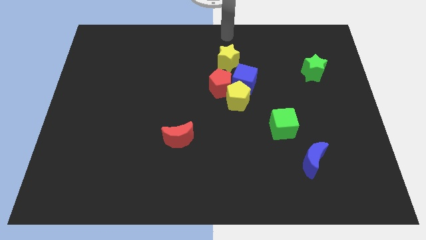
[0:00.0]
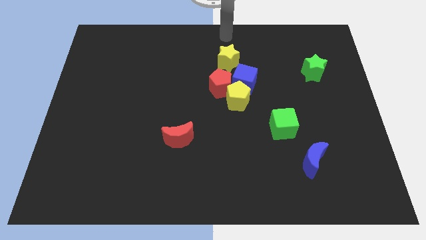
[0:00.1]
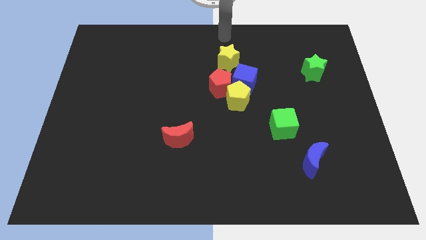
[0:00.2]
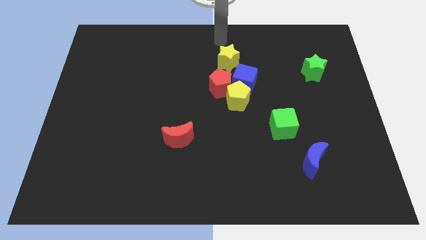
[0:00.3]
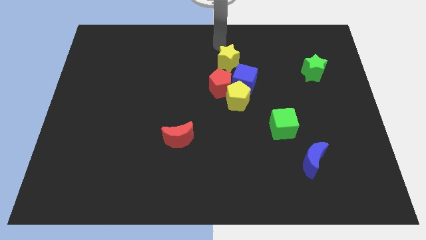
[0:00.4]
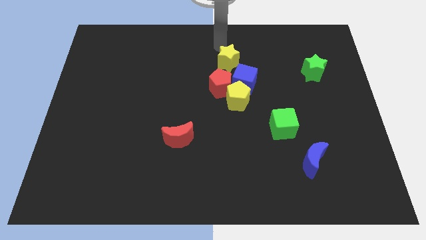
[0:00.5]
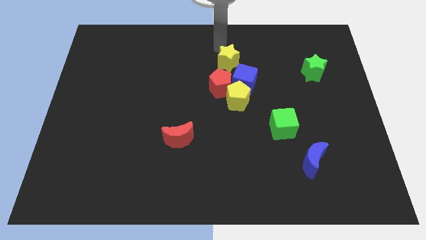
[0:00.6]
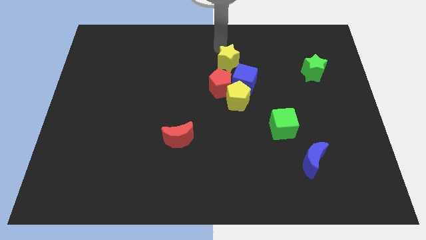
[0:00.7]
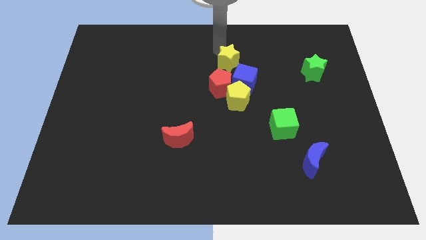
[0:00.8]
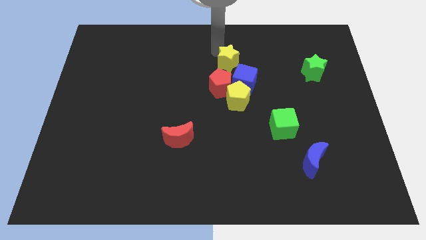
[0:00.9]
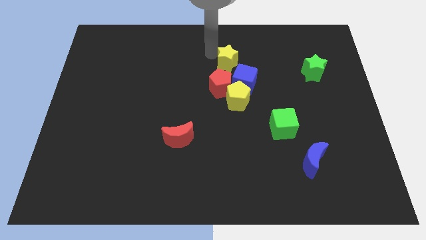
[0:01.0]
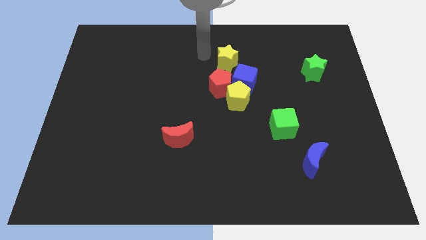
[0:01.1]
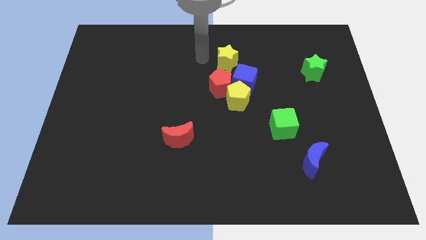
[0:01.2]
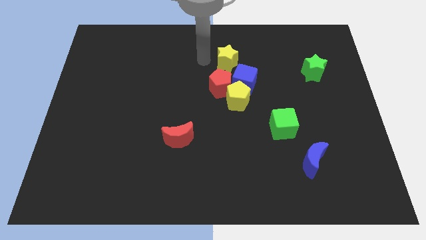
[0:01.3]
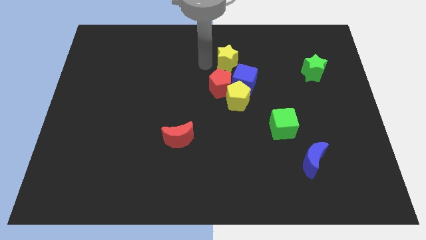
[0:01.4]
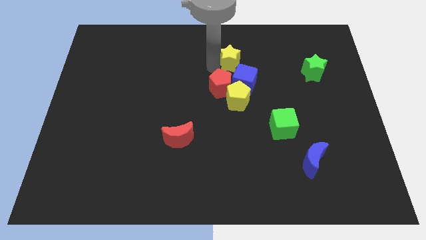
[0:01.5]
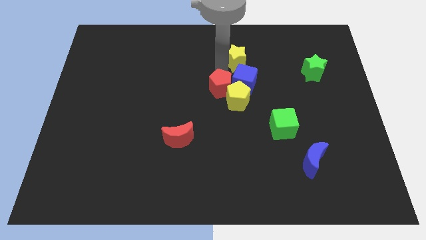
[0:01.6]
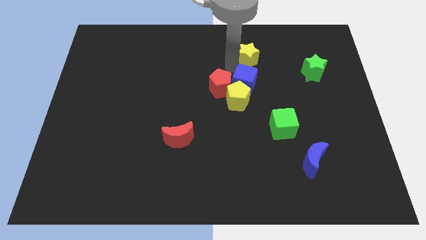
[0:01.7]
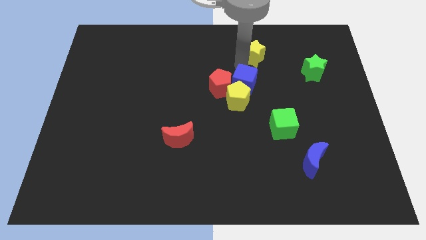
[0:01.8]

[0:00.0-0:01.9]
put the yellow star on the top of the blue cube

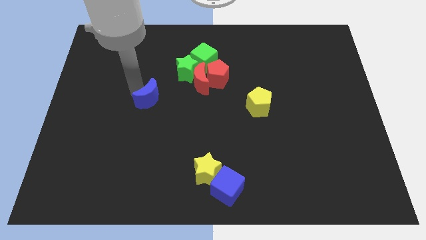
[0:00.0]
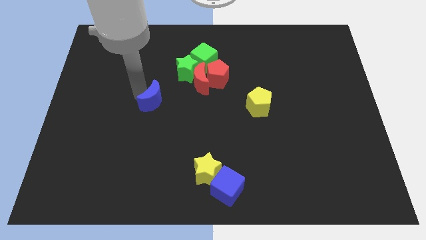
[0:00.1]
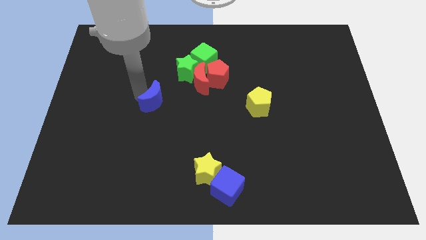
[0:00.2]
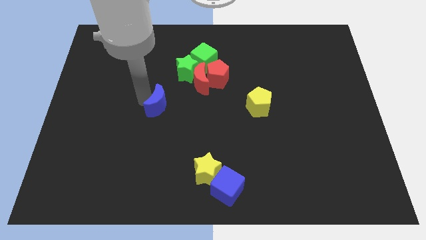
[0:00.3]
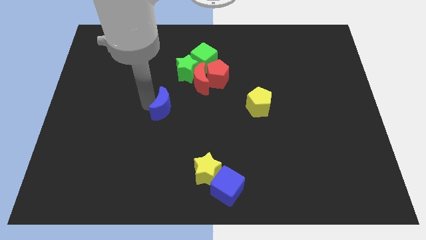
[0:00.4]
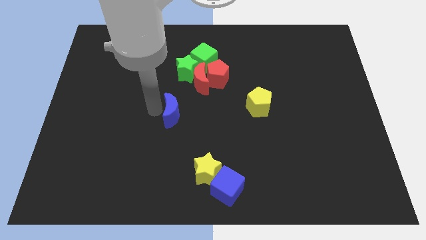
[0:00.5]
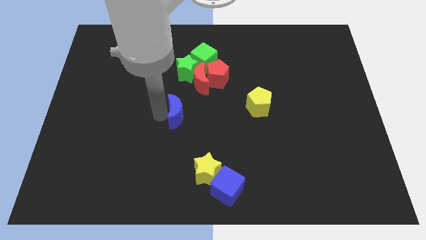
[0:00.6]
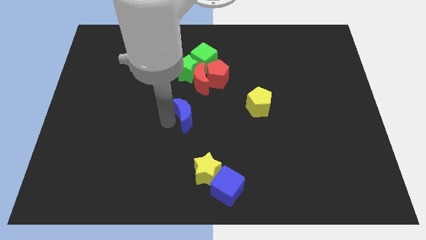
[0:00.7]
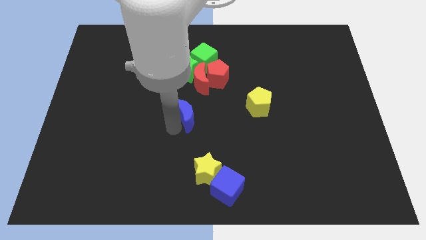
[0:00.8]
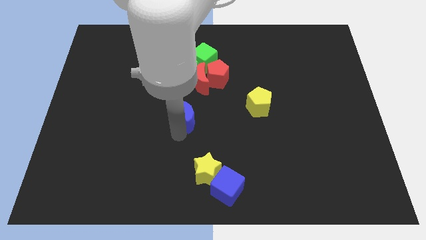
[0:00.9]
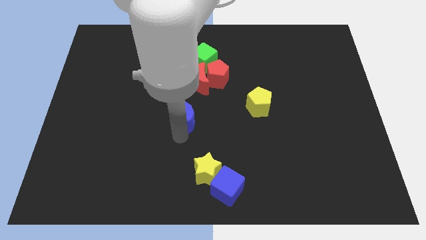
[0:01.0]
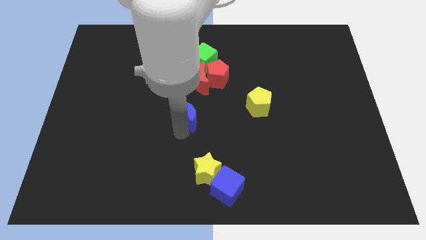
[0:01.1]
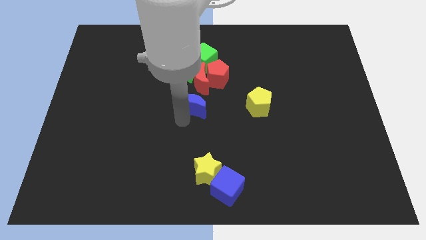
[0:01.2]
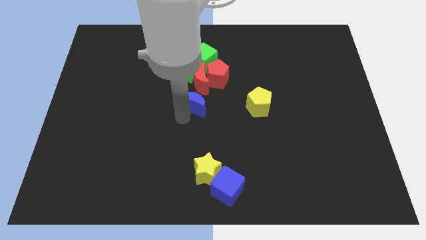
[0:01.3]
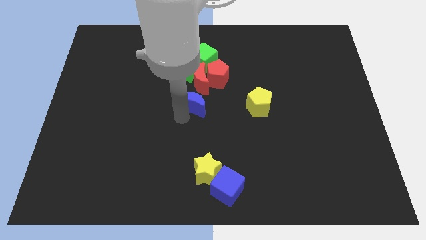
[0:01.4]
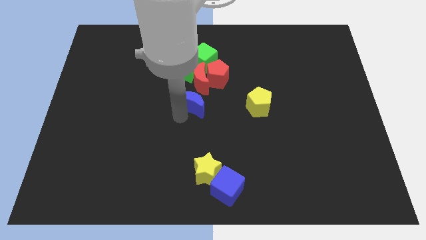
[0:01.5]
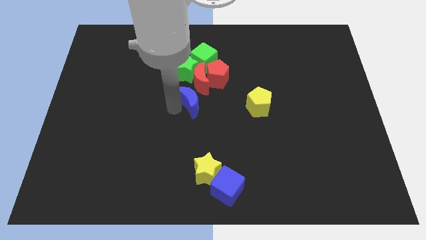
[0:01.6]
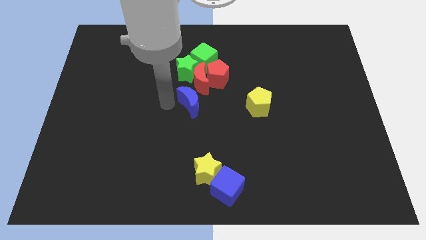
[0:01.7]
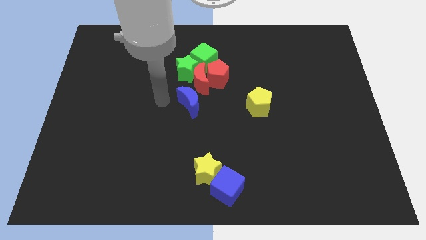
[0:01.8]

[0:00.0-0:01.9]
place the blue crescent below to the green star

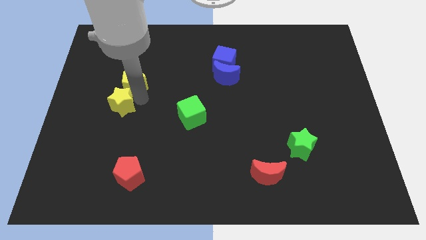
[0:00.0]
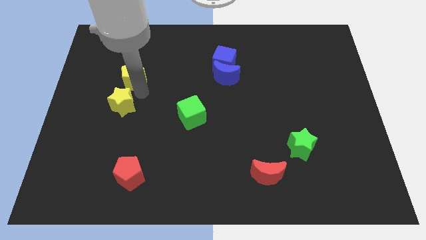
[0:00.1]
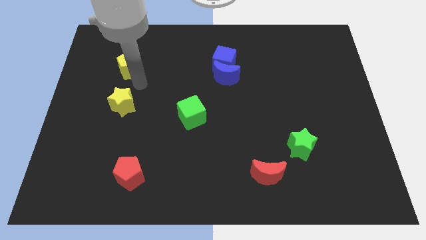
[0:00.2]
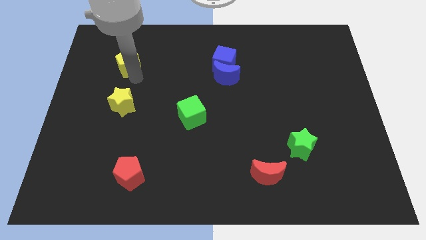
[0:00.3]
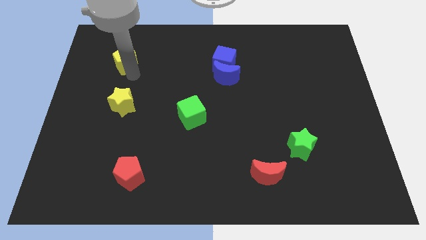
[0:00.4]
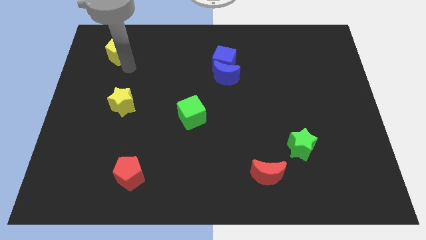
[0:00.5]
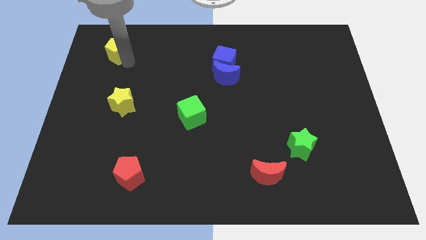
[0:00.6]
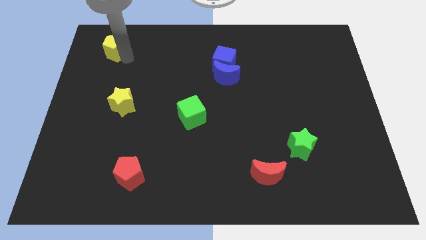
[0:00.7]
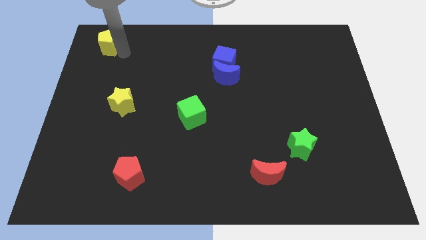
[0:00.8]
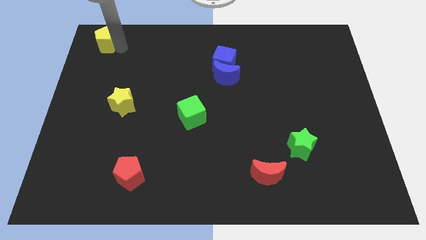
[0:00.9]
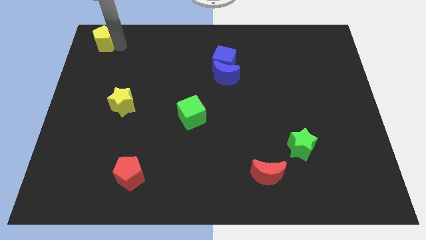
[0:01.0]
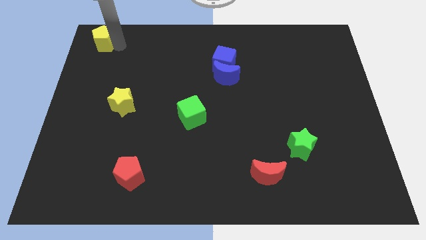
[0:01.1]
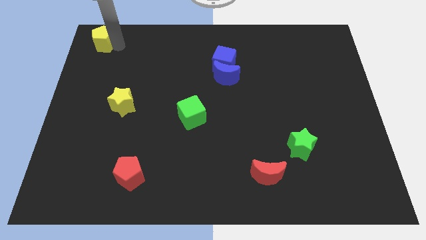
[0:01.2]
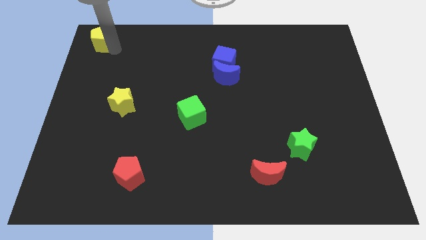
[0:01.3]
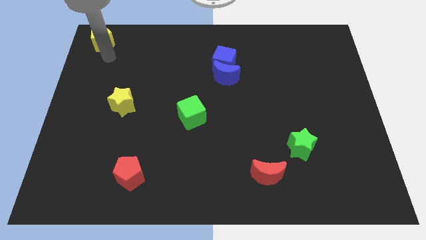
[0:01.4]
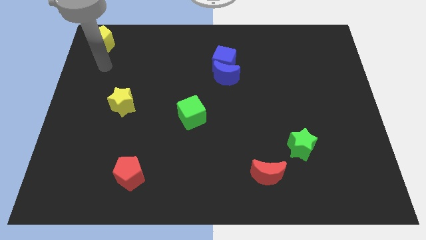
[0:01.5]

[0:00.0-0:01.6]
push the yellow pentagon towards the top left of the board

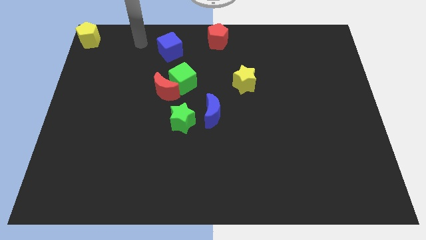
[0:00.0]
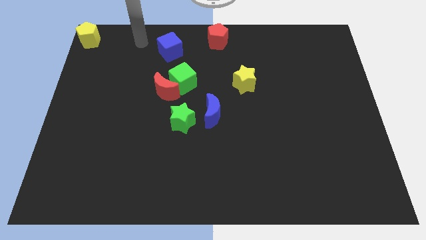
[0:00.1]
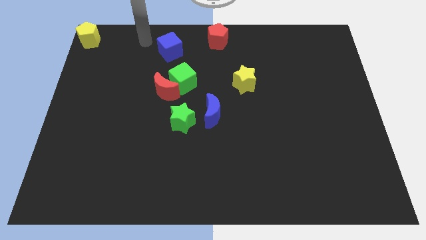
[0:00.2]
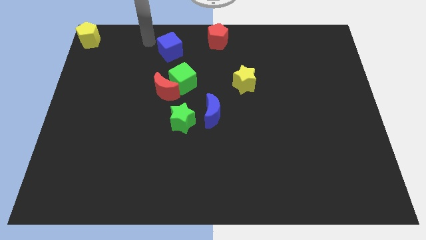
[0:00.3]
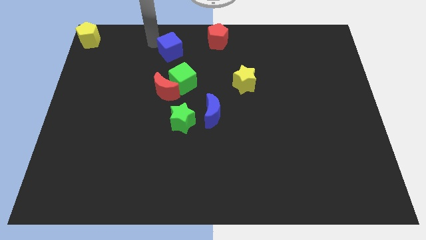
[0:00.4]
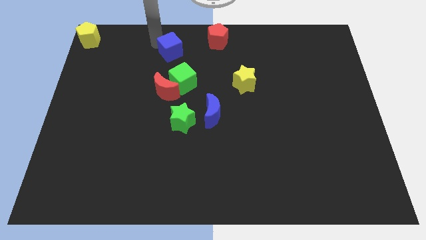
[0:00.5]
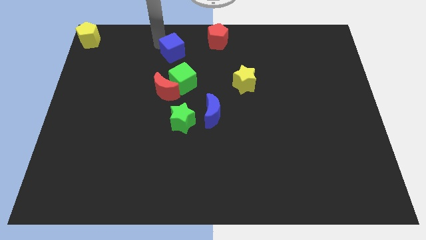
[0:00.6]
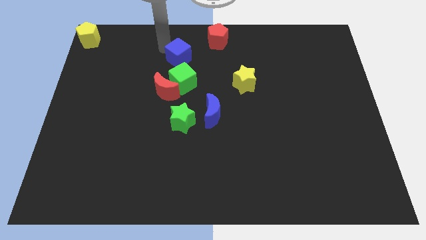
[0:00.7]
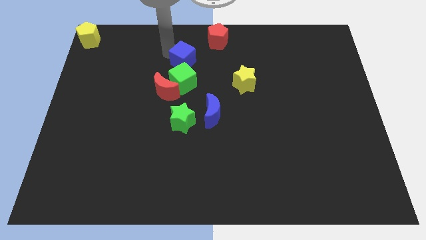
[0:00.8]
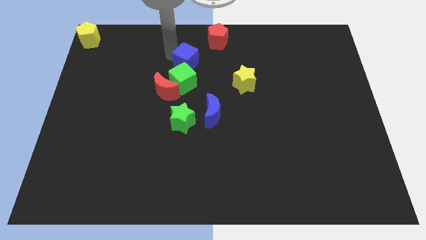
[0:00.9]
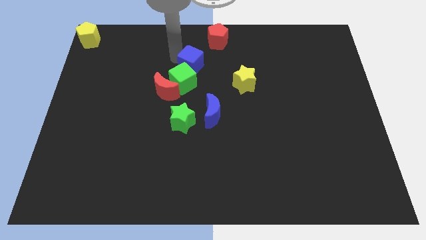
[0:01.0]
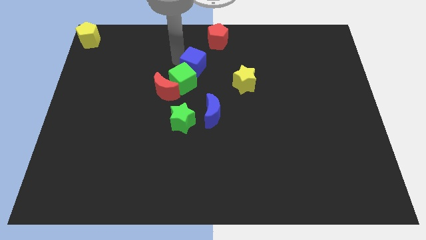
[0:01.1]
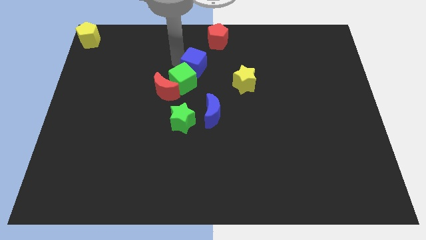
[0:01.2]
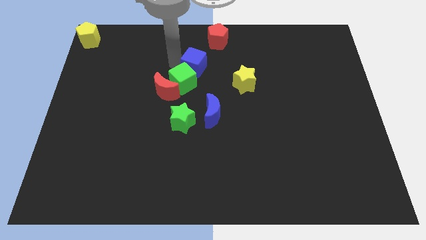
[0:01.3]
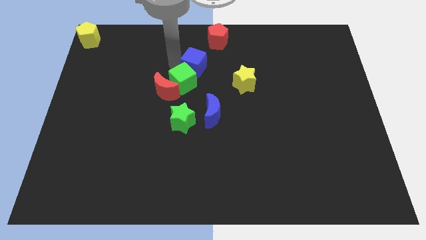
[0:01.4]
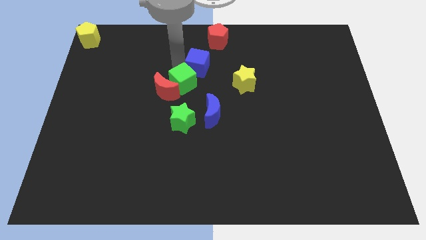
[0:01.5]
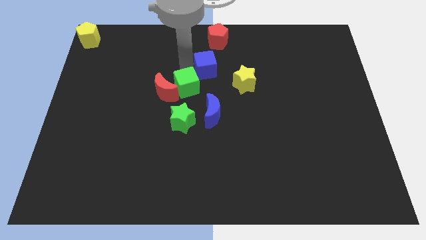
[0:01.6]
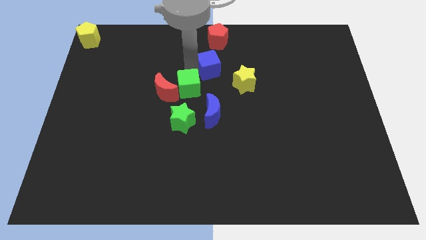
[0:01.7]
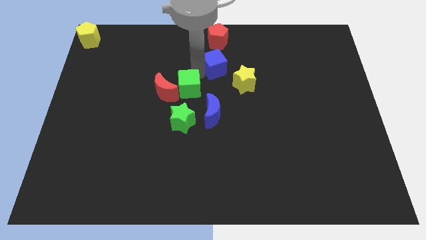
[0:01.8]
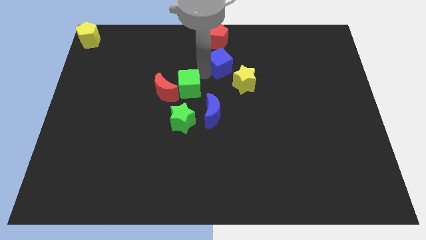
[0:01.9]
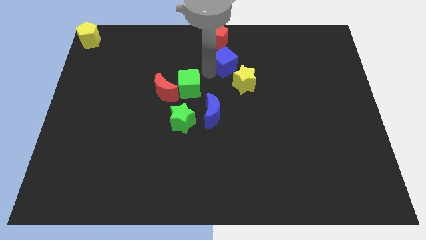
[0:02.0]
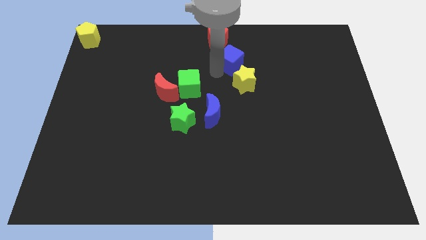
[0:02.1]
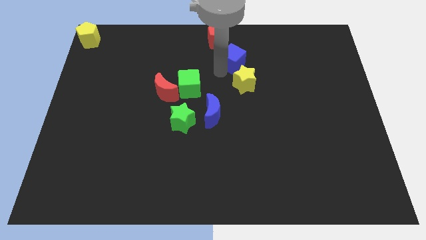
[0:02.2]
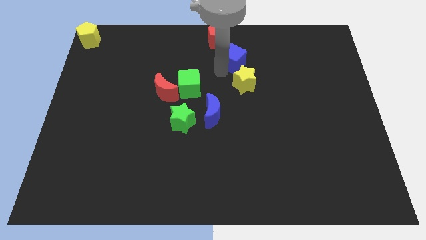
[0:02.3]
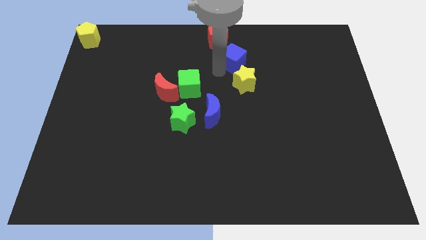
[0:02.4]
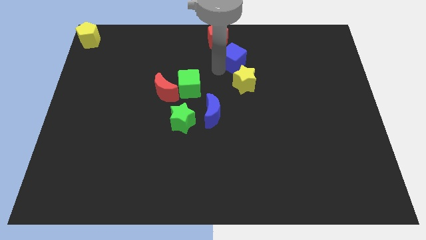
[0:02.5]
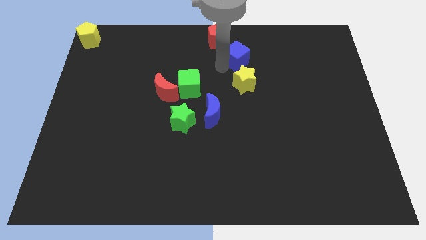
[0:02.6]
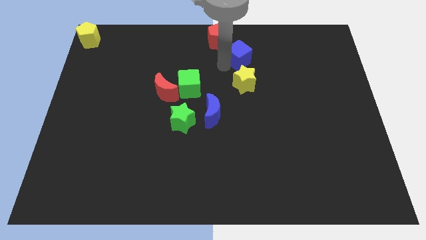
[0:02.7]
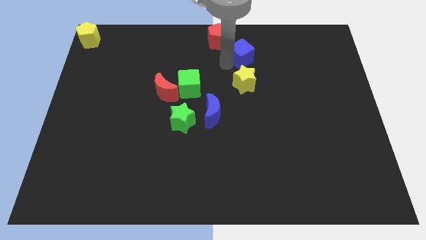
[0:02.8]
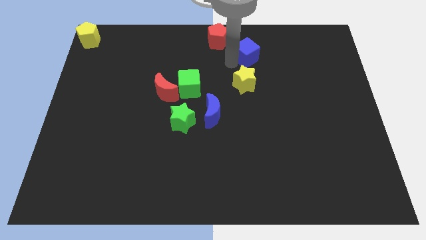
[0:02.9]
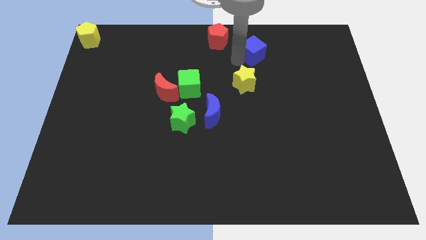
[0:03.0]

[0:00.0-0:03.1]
slide blue cube above yellow star

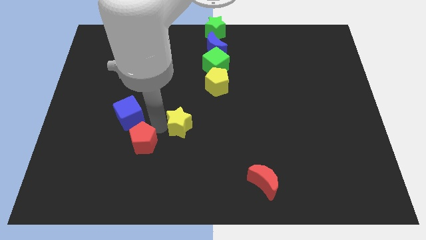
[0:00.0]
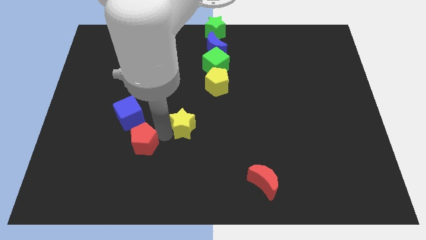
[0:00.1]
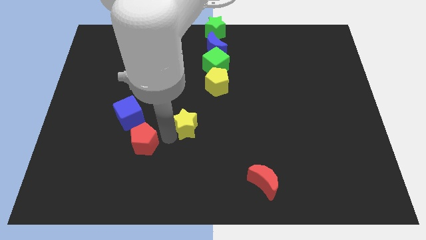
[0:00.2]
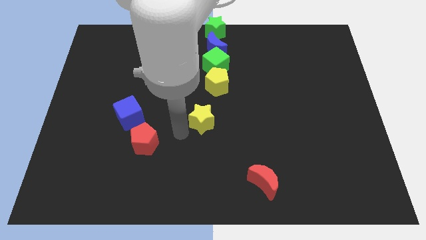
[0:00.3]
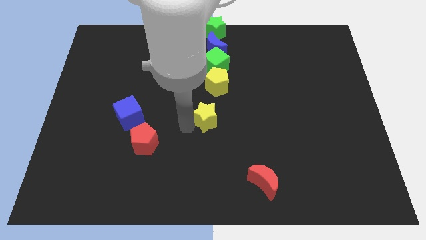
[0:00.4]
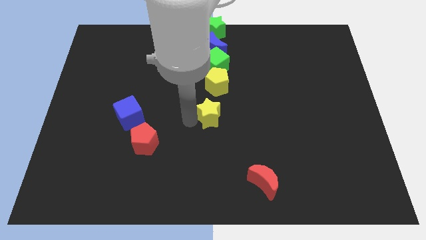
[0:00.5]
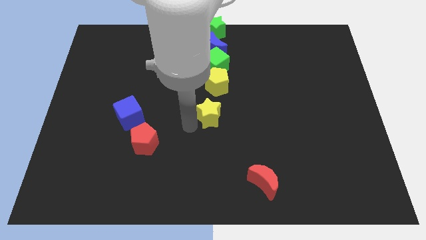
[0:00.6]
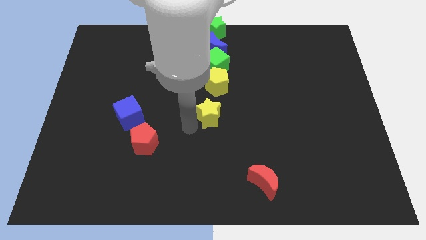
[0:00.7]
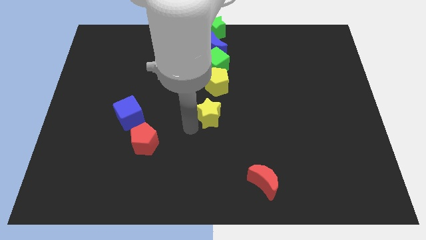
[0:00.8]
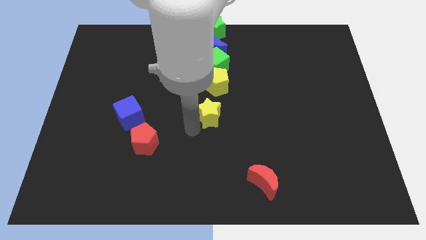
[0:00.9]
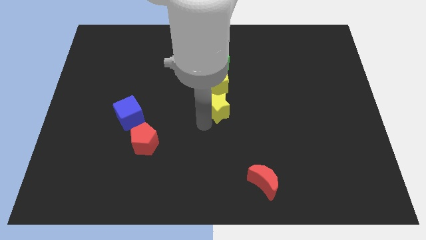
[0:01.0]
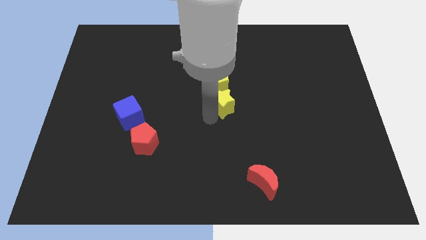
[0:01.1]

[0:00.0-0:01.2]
move the yellow star to the bottom of the yellow pentagon
